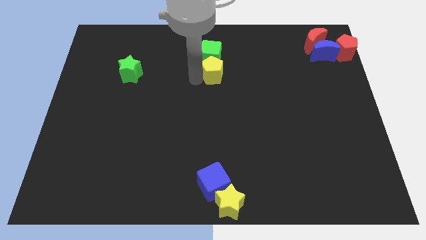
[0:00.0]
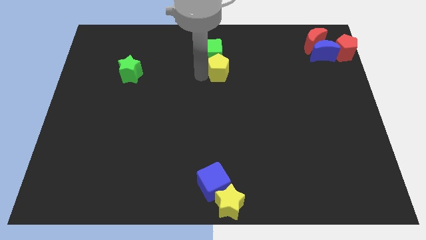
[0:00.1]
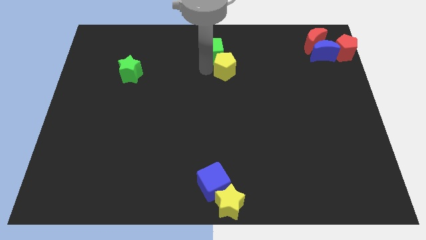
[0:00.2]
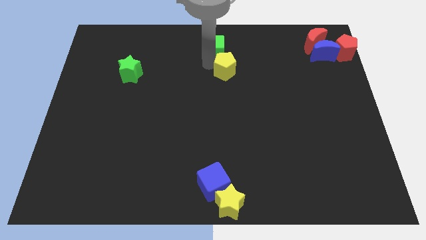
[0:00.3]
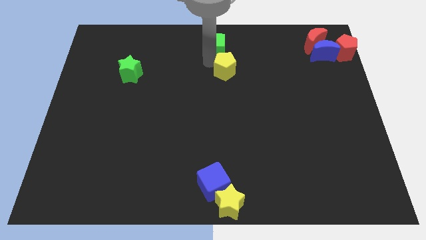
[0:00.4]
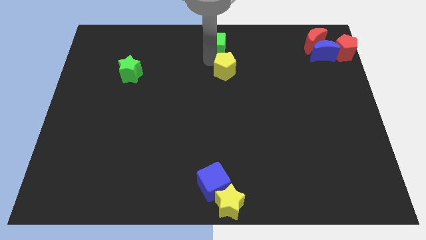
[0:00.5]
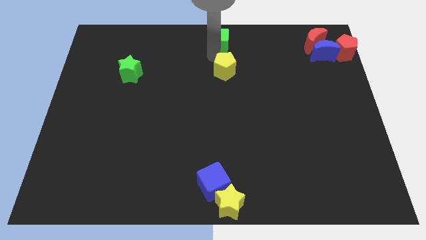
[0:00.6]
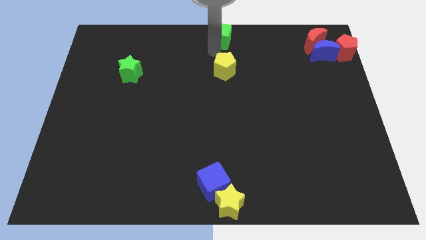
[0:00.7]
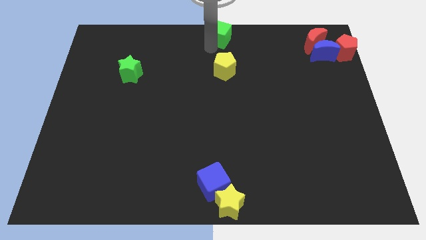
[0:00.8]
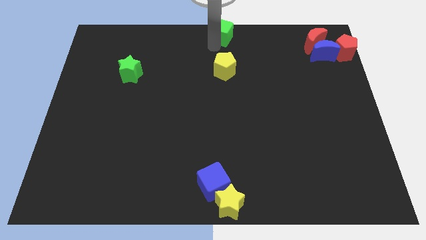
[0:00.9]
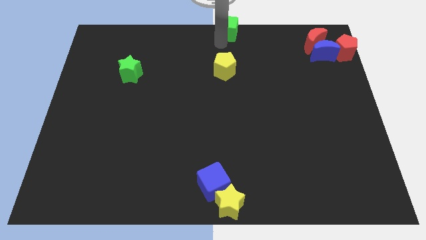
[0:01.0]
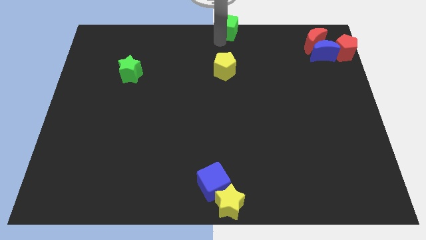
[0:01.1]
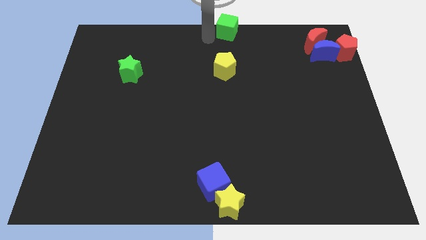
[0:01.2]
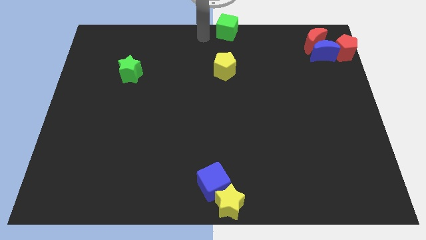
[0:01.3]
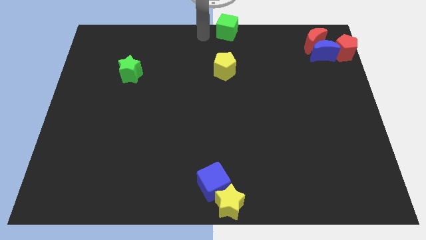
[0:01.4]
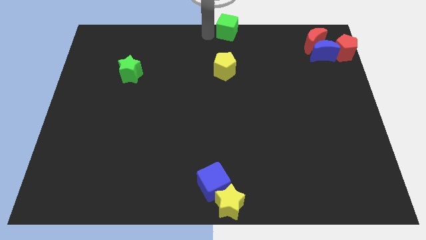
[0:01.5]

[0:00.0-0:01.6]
slide the green cube vertically to the top center side of the yellow pentagon

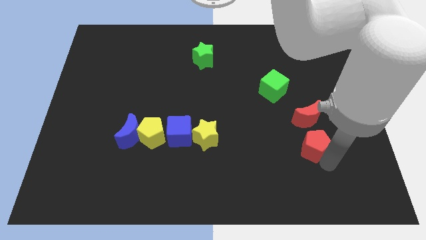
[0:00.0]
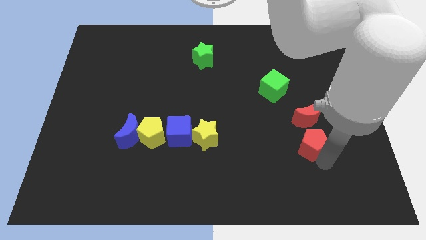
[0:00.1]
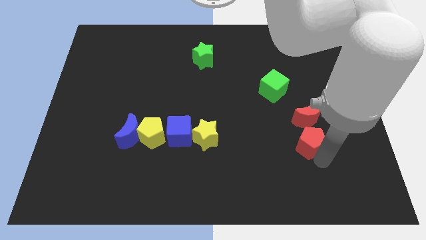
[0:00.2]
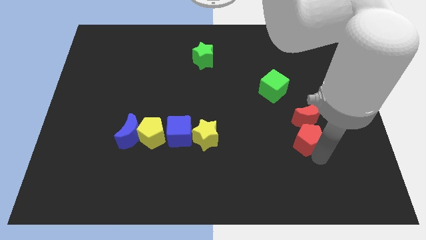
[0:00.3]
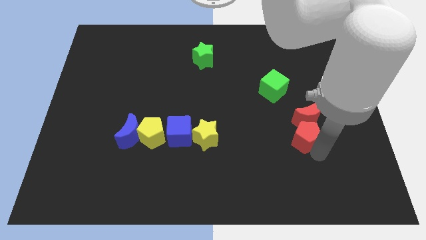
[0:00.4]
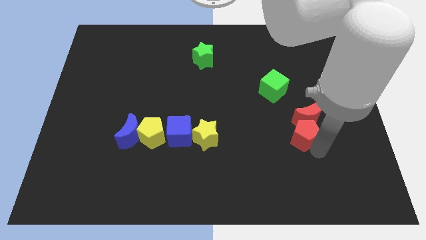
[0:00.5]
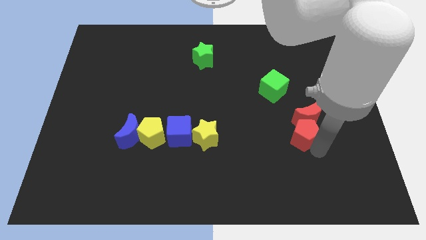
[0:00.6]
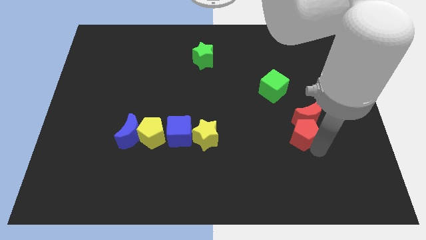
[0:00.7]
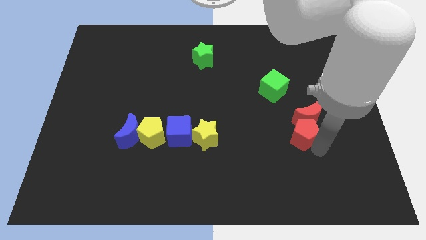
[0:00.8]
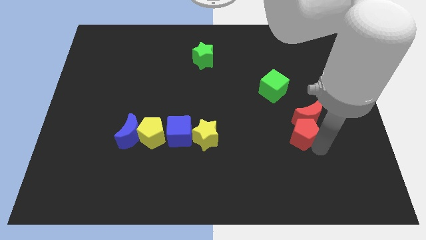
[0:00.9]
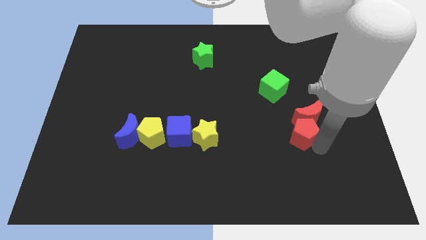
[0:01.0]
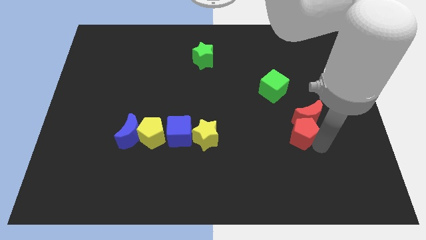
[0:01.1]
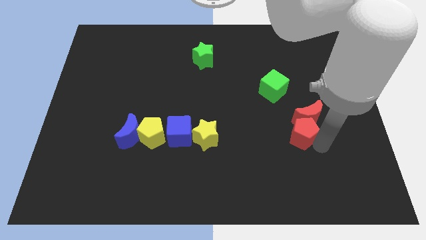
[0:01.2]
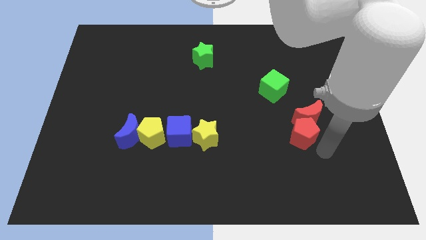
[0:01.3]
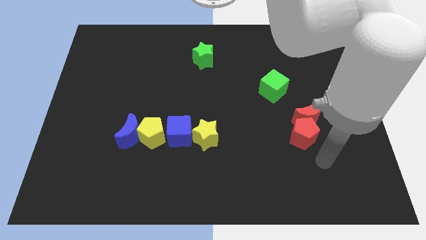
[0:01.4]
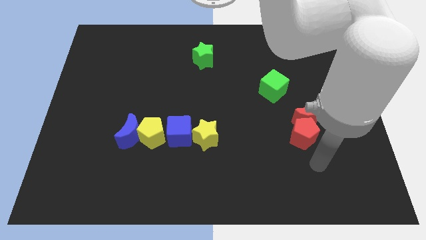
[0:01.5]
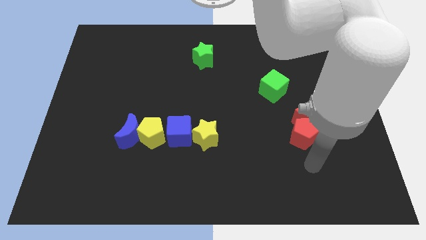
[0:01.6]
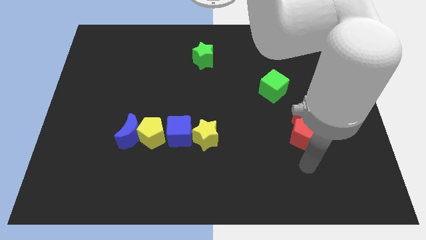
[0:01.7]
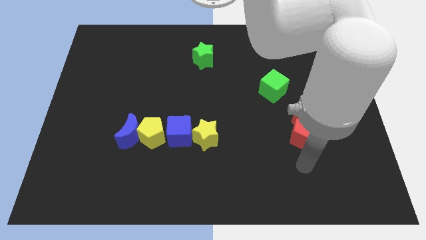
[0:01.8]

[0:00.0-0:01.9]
push the red pentagon into the red crescent from the bottom

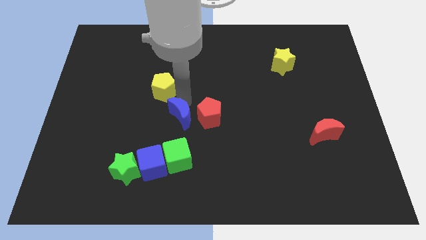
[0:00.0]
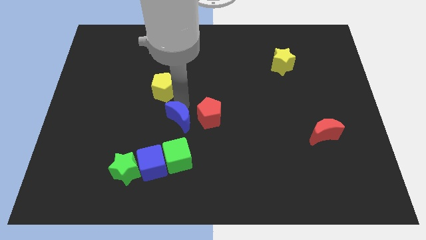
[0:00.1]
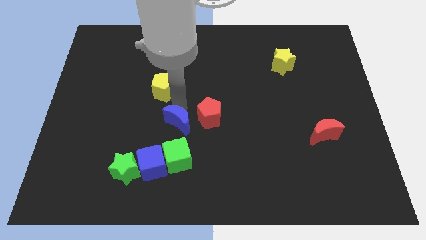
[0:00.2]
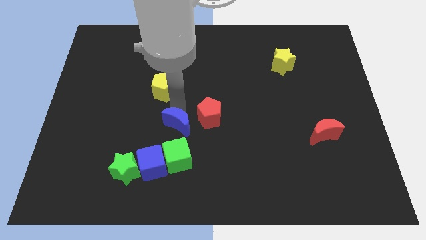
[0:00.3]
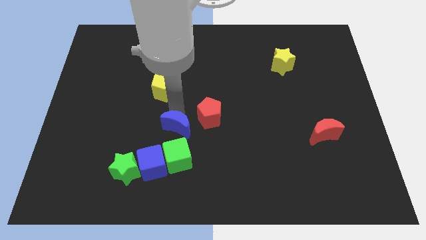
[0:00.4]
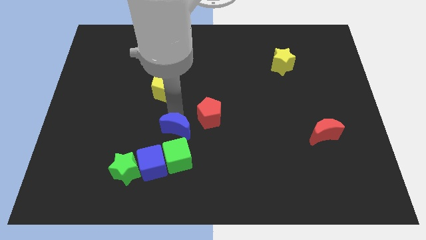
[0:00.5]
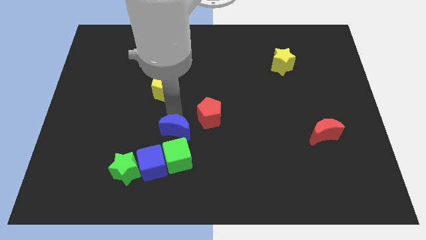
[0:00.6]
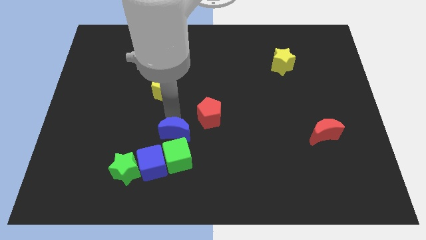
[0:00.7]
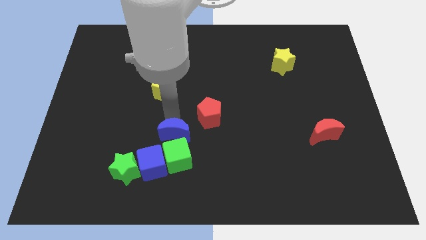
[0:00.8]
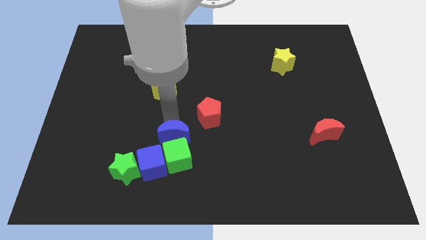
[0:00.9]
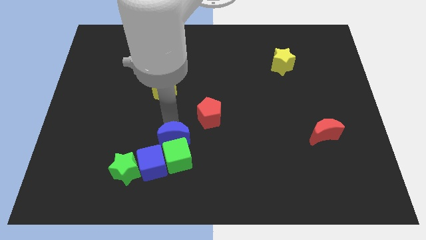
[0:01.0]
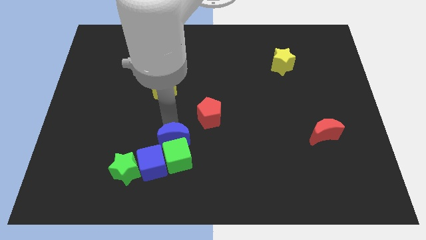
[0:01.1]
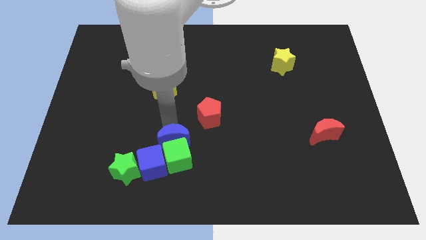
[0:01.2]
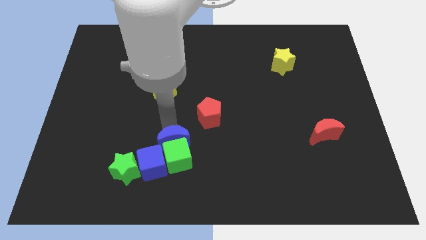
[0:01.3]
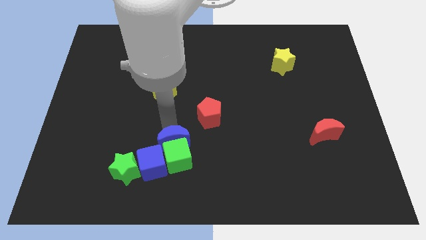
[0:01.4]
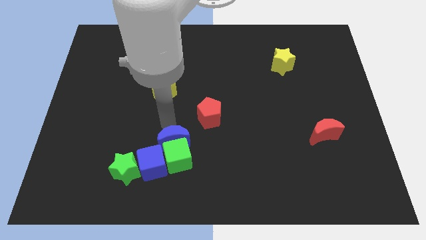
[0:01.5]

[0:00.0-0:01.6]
move blue moon into green cube

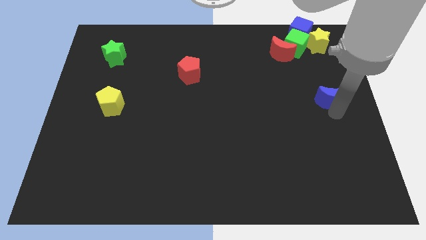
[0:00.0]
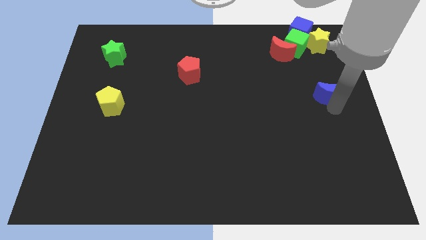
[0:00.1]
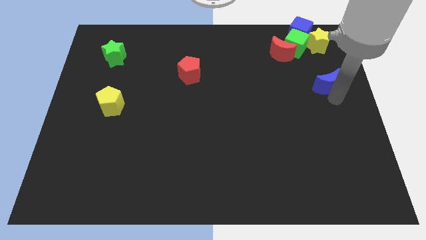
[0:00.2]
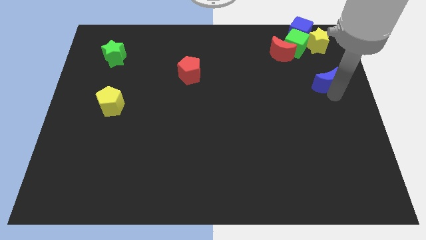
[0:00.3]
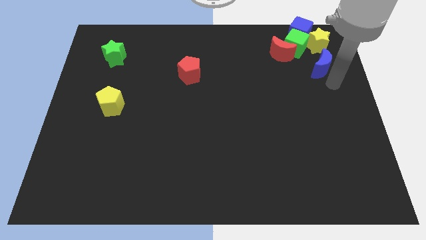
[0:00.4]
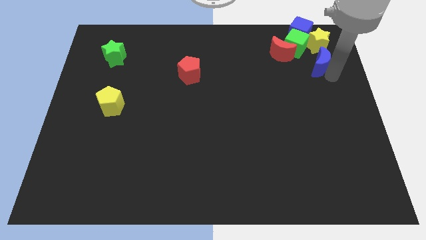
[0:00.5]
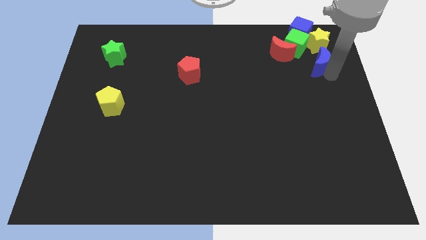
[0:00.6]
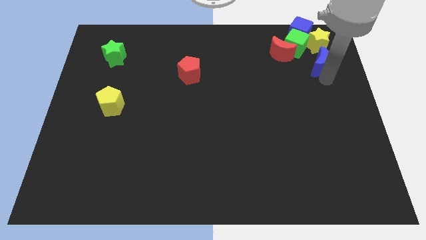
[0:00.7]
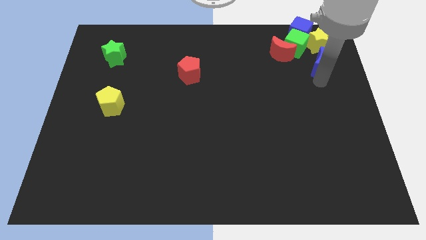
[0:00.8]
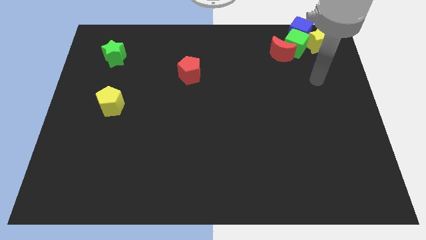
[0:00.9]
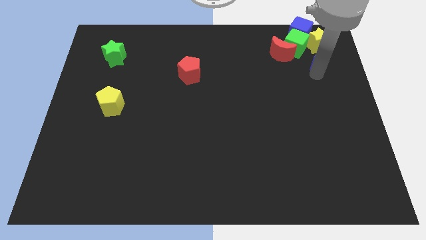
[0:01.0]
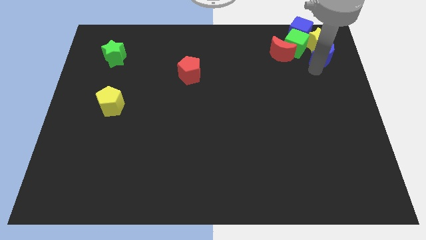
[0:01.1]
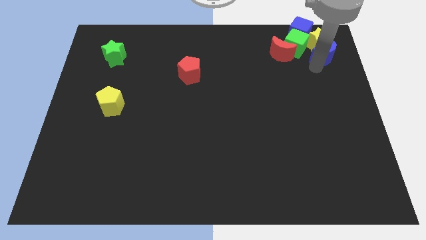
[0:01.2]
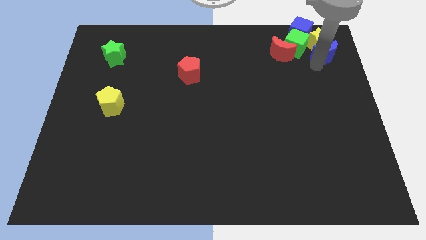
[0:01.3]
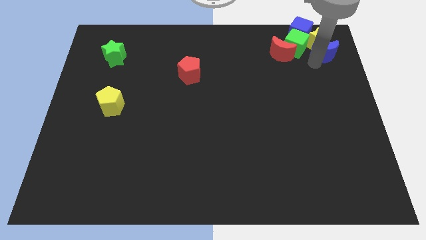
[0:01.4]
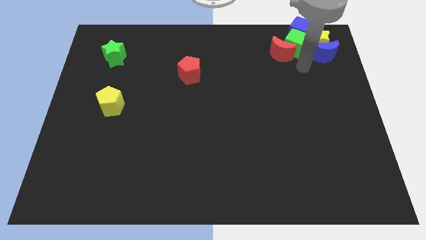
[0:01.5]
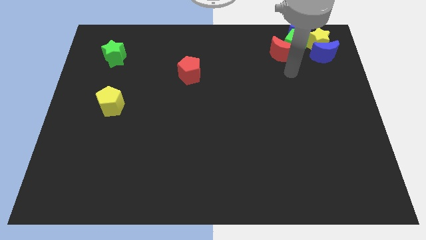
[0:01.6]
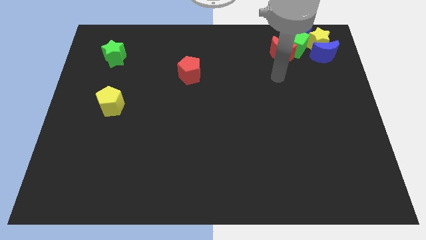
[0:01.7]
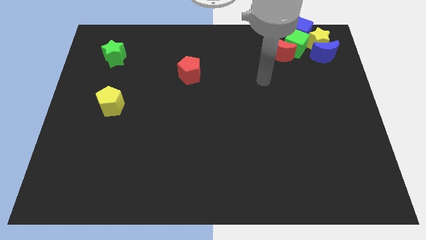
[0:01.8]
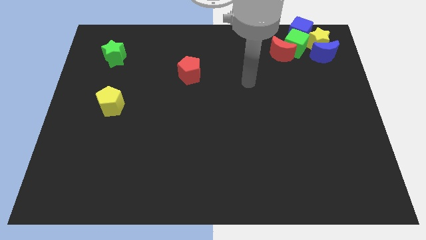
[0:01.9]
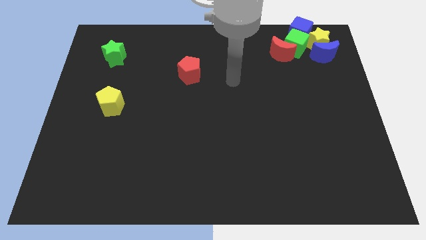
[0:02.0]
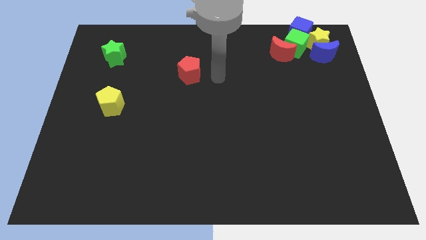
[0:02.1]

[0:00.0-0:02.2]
move the blue crescent into the group of blocks

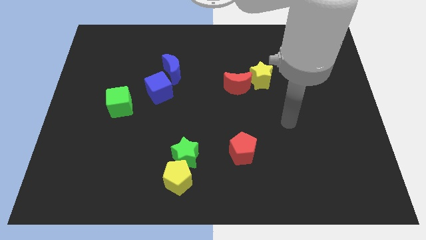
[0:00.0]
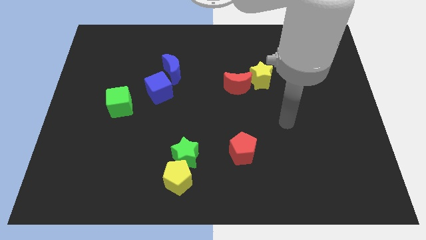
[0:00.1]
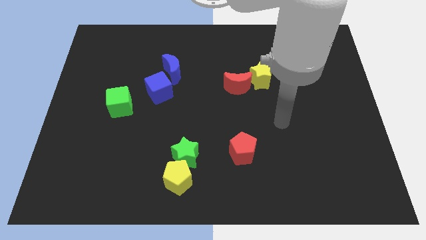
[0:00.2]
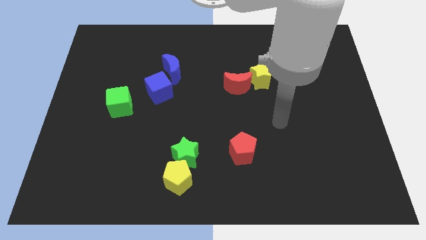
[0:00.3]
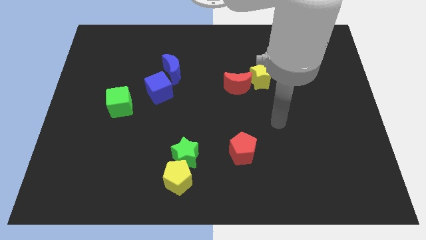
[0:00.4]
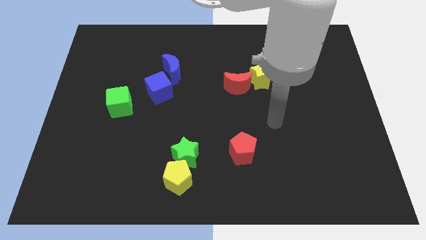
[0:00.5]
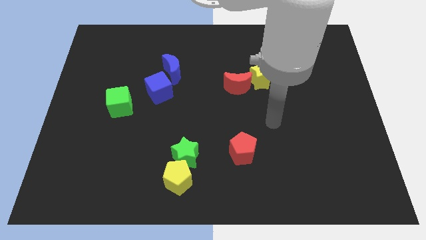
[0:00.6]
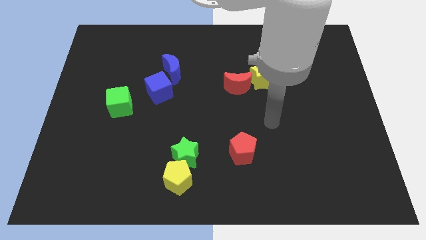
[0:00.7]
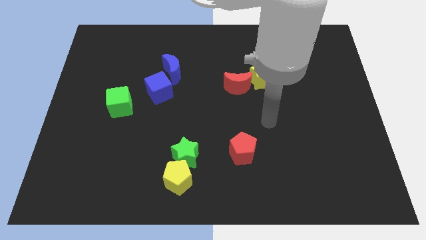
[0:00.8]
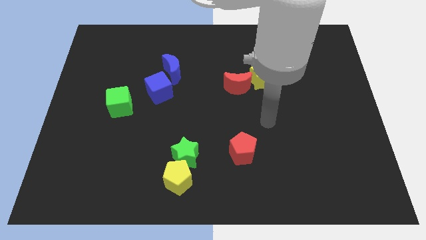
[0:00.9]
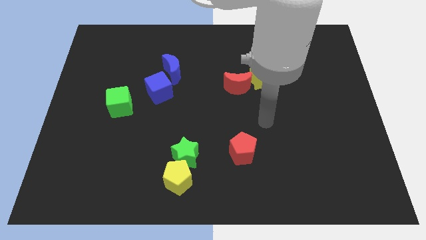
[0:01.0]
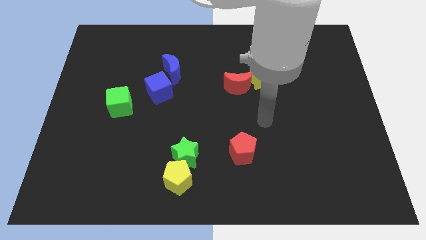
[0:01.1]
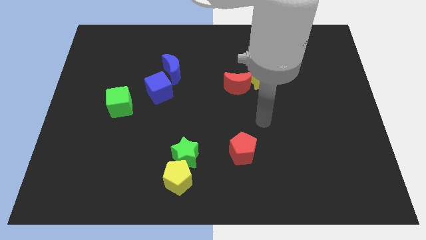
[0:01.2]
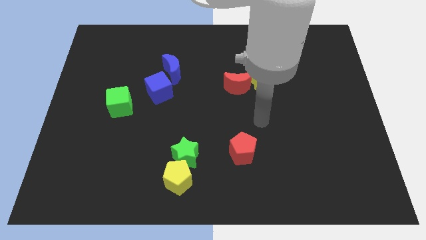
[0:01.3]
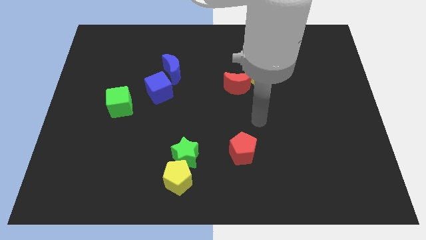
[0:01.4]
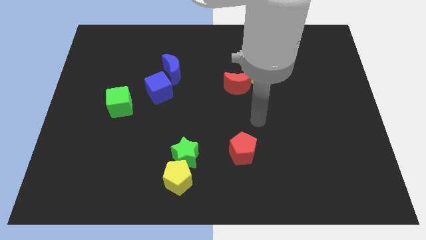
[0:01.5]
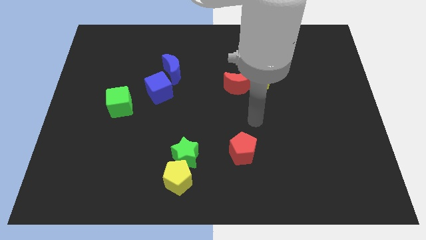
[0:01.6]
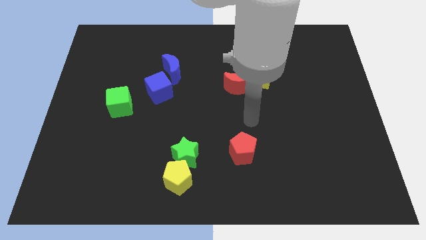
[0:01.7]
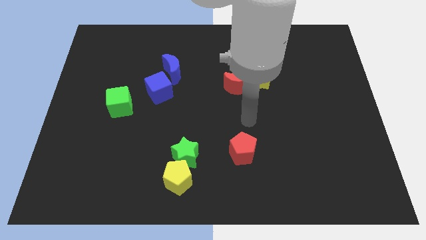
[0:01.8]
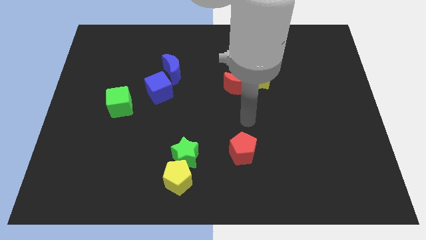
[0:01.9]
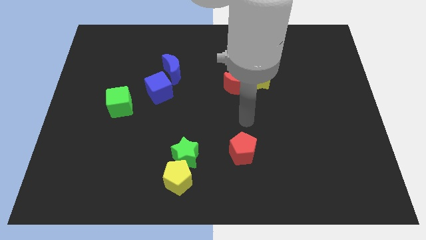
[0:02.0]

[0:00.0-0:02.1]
point your arm at the top of the red pentagon
